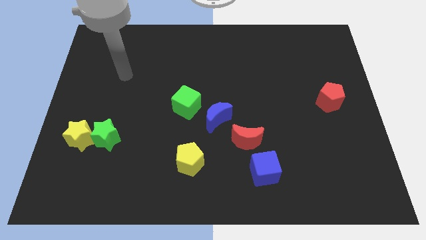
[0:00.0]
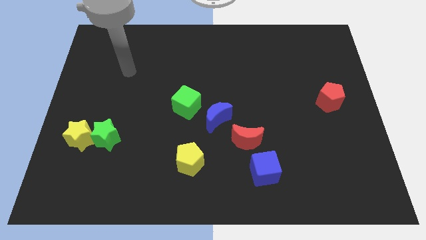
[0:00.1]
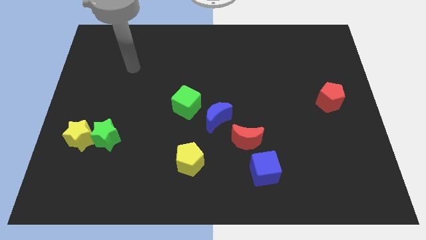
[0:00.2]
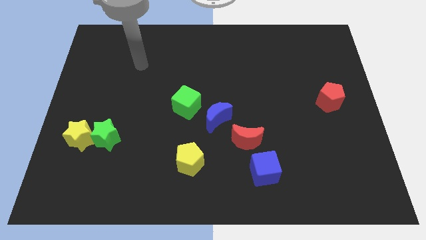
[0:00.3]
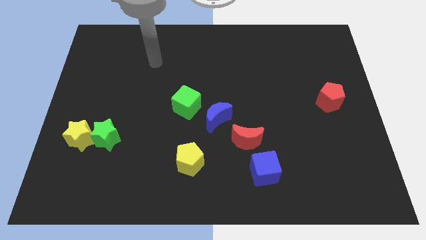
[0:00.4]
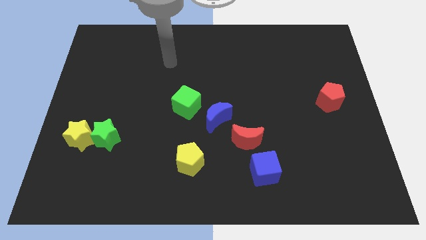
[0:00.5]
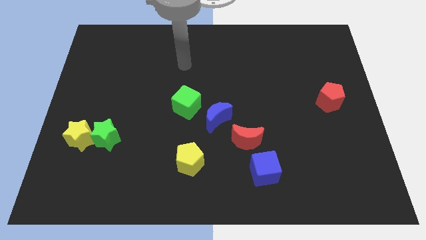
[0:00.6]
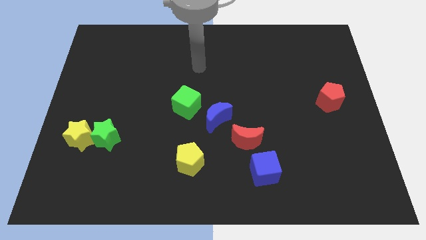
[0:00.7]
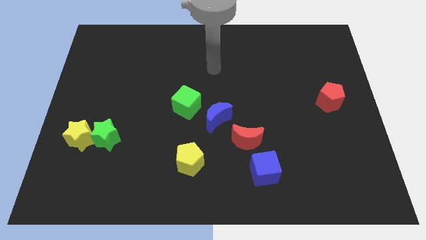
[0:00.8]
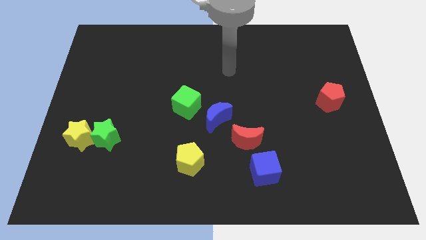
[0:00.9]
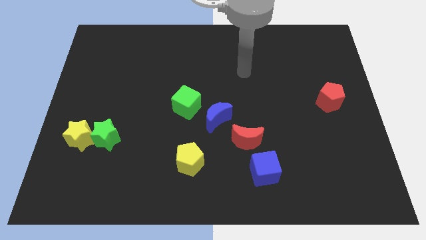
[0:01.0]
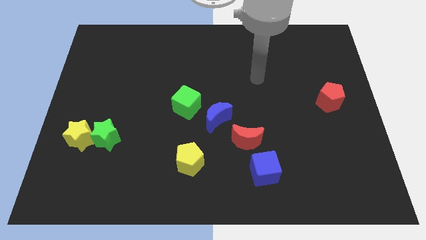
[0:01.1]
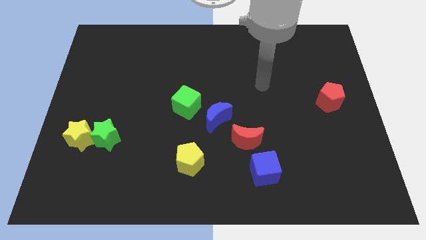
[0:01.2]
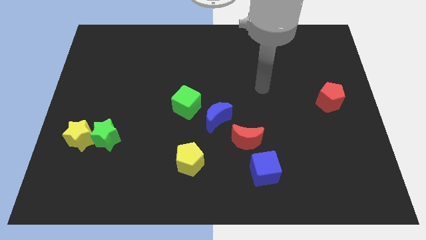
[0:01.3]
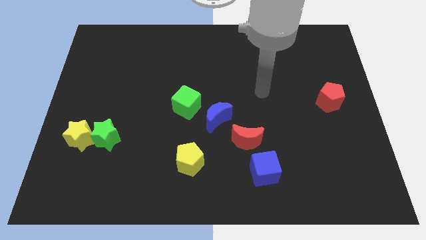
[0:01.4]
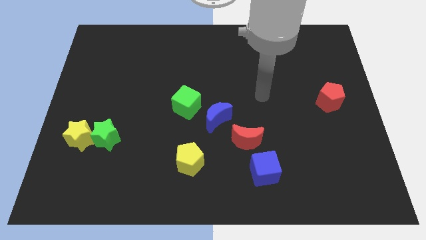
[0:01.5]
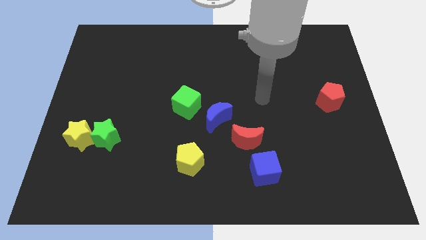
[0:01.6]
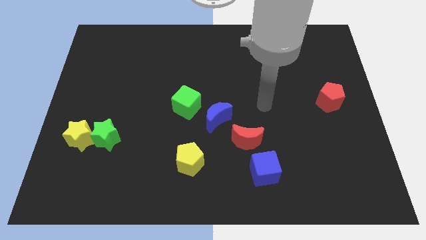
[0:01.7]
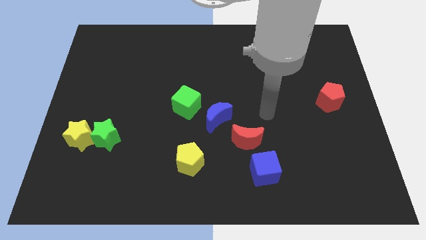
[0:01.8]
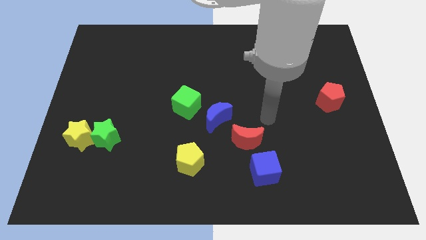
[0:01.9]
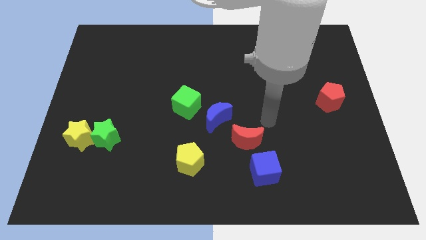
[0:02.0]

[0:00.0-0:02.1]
move your arm towards the red crescent

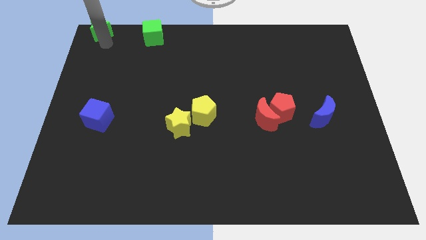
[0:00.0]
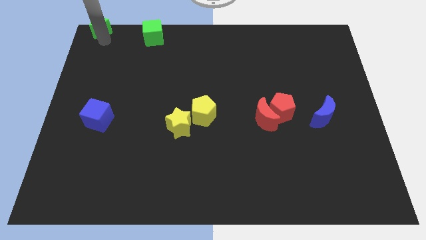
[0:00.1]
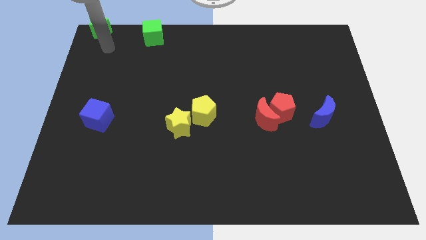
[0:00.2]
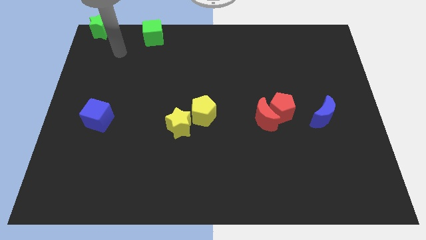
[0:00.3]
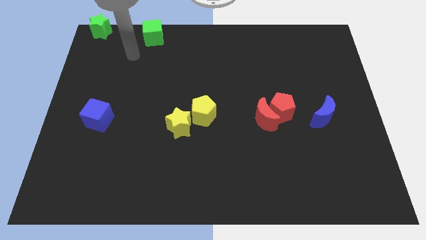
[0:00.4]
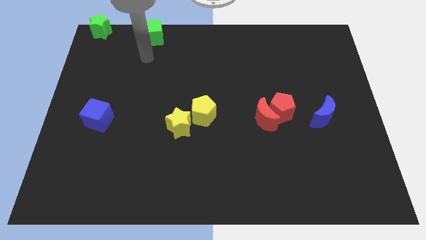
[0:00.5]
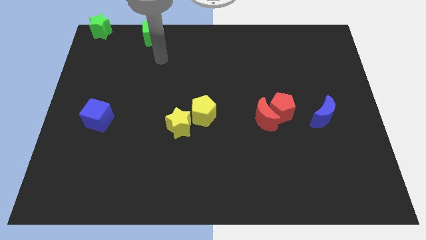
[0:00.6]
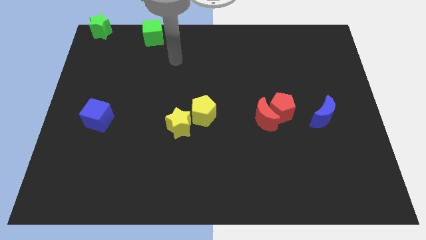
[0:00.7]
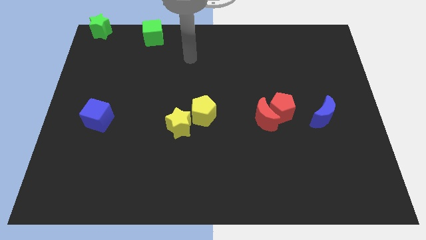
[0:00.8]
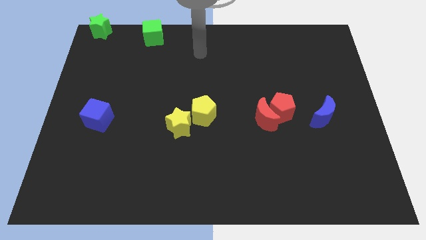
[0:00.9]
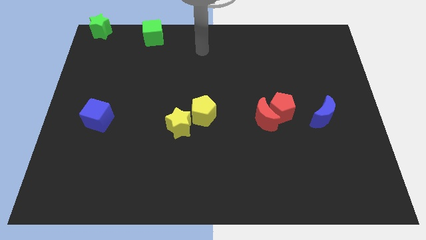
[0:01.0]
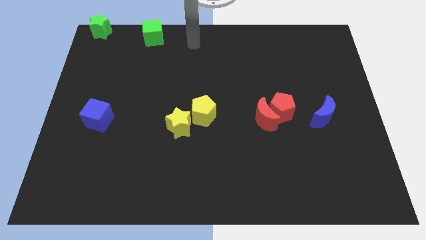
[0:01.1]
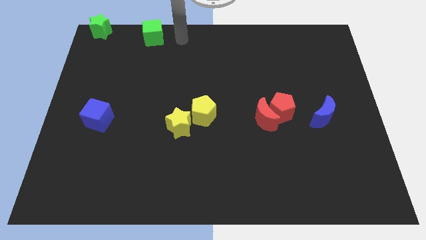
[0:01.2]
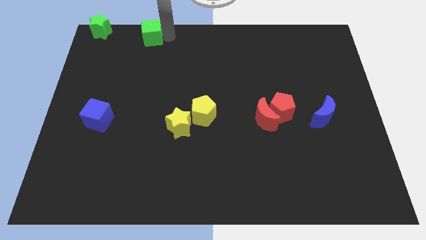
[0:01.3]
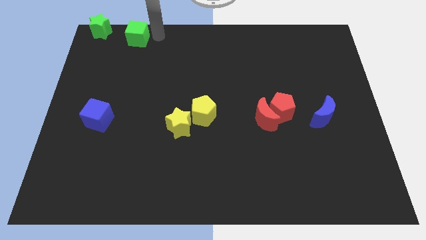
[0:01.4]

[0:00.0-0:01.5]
move the arm to the right of the green cube

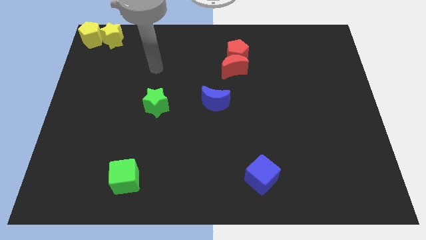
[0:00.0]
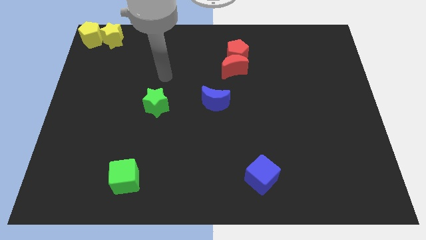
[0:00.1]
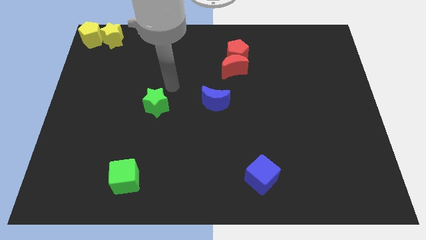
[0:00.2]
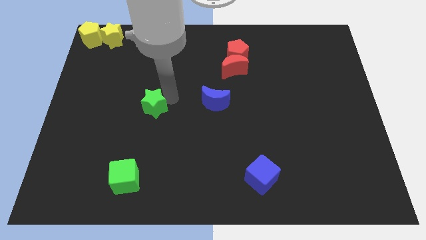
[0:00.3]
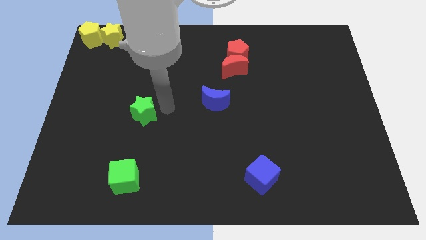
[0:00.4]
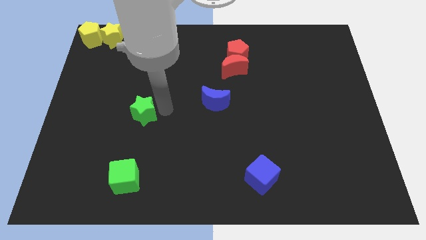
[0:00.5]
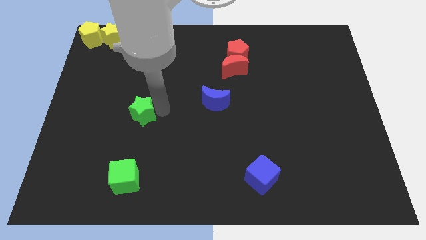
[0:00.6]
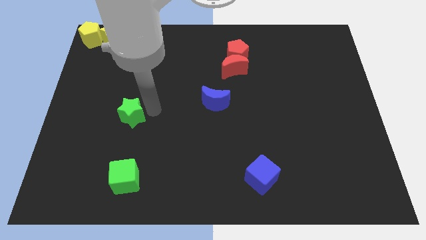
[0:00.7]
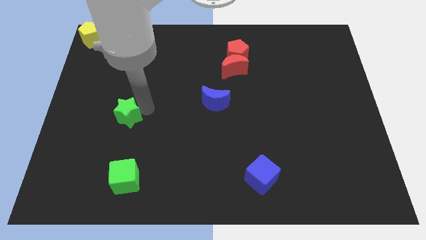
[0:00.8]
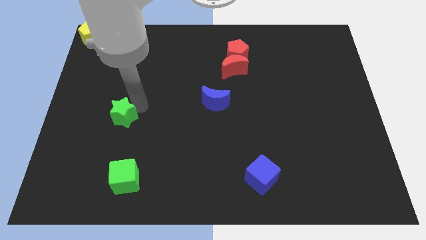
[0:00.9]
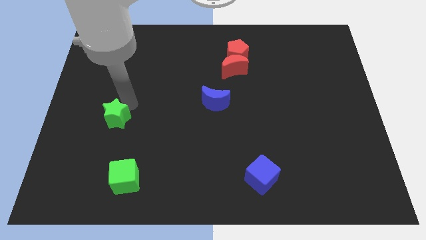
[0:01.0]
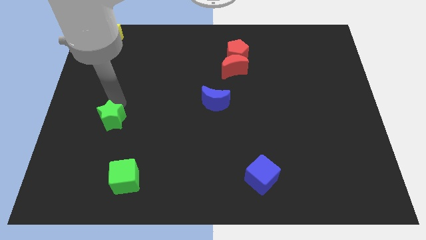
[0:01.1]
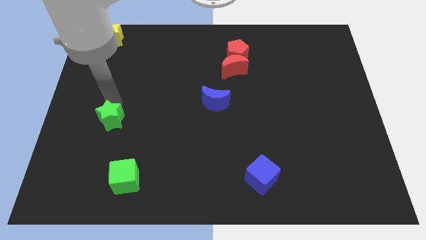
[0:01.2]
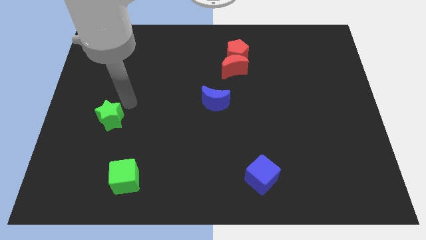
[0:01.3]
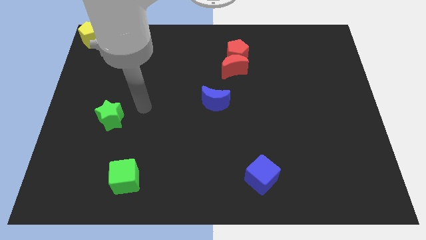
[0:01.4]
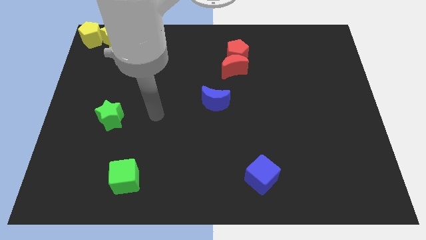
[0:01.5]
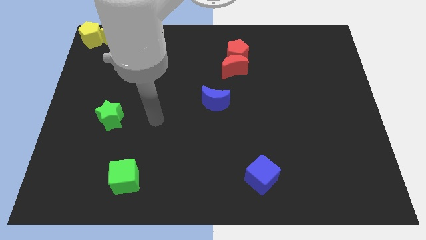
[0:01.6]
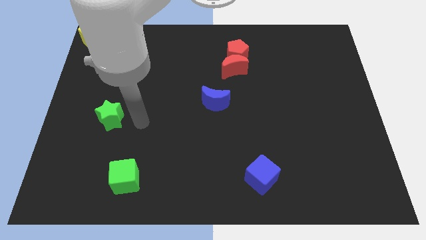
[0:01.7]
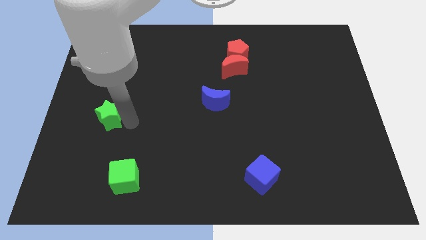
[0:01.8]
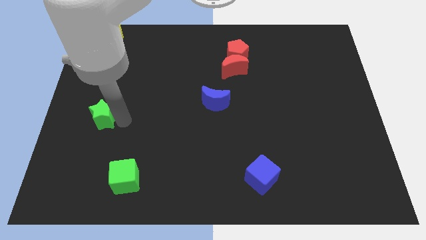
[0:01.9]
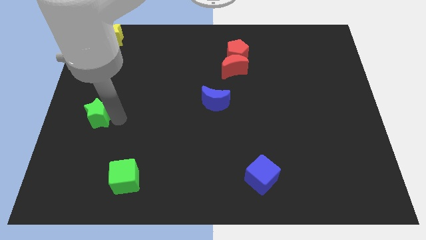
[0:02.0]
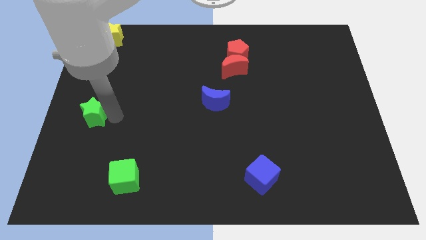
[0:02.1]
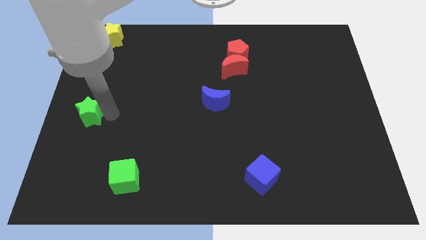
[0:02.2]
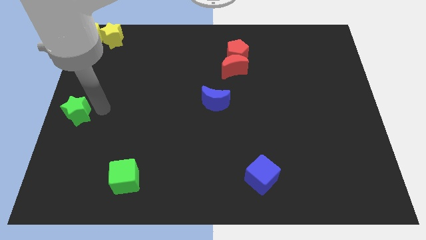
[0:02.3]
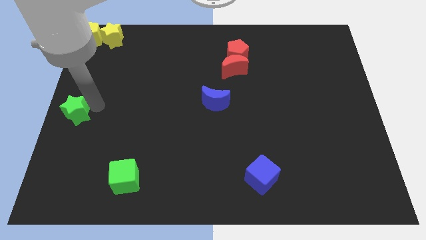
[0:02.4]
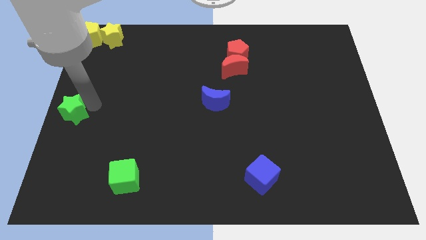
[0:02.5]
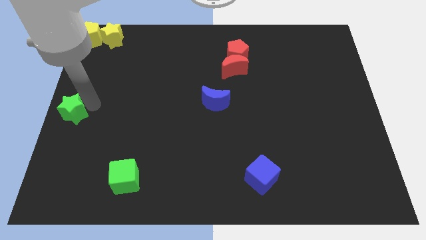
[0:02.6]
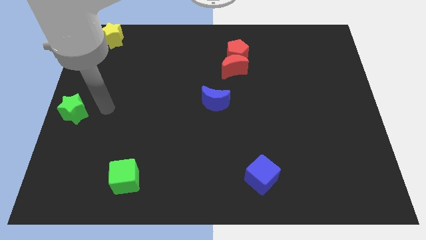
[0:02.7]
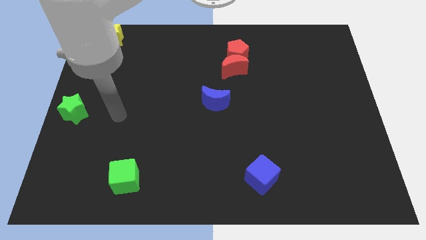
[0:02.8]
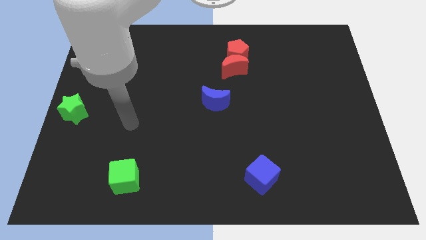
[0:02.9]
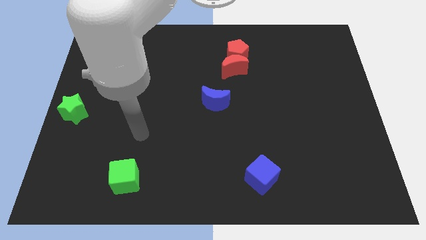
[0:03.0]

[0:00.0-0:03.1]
move the green star to the center left

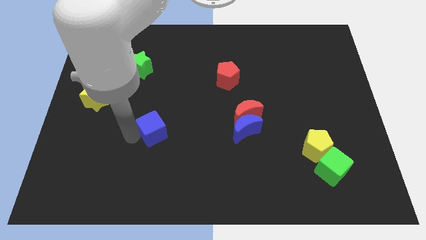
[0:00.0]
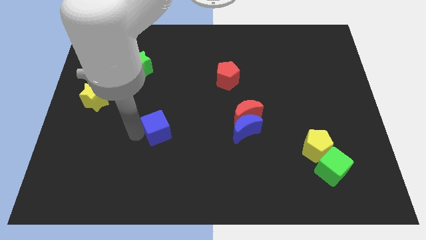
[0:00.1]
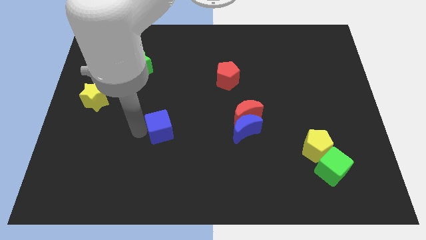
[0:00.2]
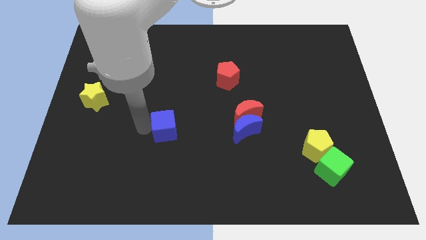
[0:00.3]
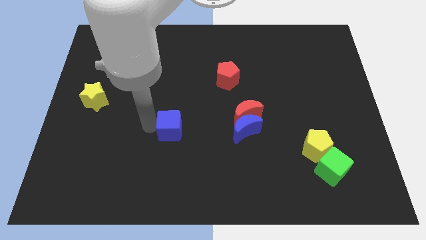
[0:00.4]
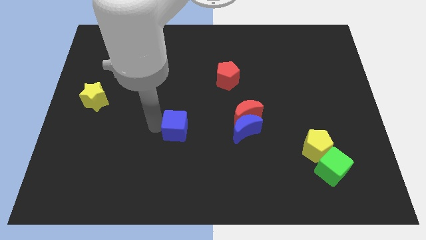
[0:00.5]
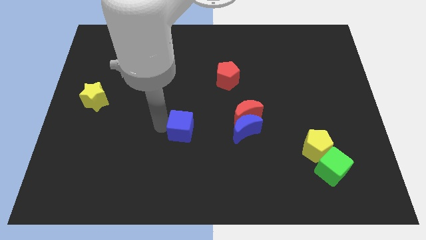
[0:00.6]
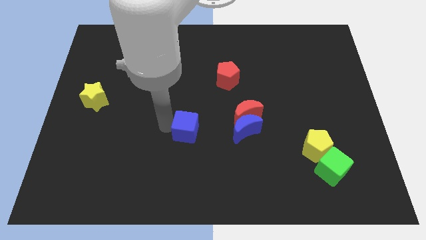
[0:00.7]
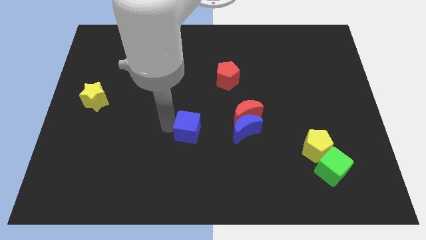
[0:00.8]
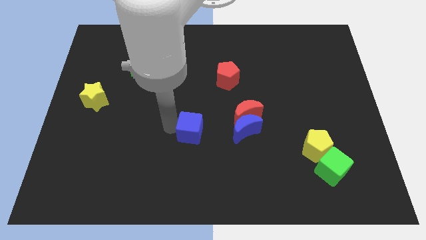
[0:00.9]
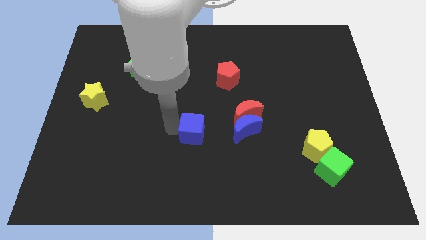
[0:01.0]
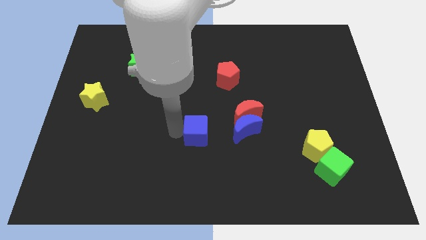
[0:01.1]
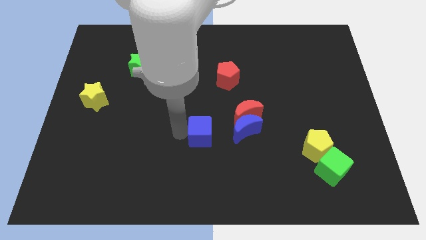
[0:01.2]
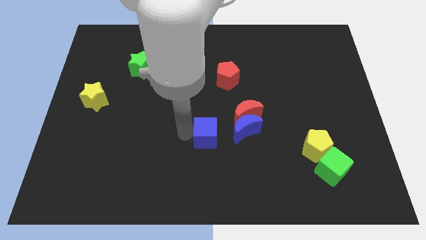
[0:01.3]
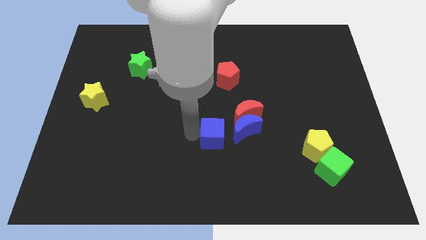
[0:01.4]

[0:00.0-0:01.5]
push the blue cube to the left of the blue crescent

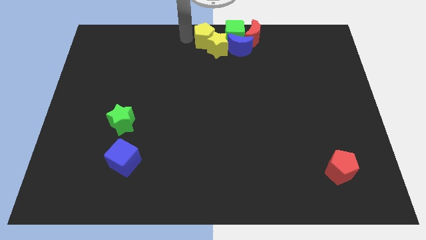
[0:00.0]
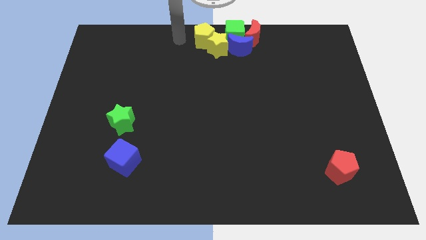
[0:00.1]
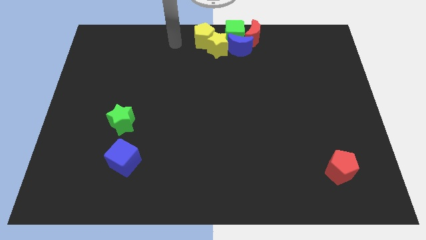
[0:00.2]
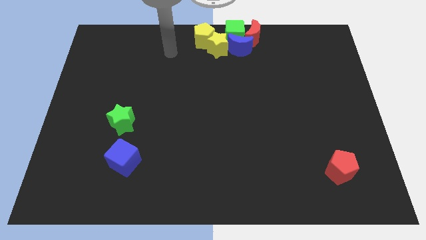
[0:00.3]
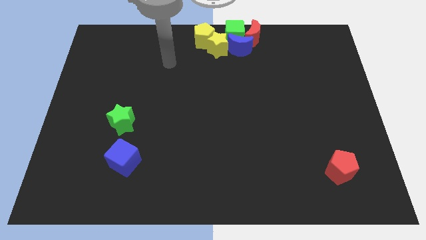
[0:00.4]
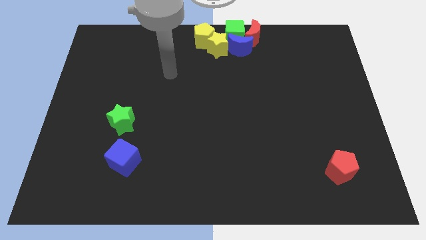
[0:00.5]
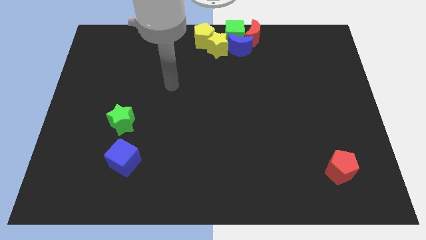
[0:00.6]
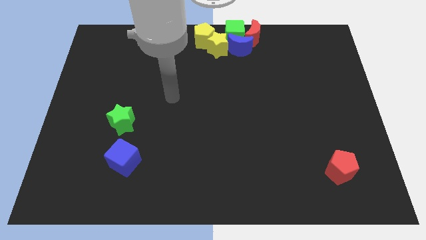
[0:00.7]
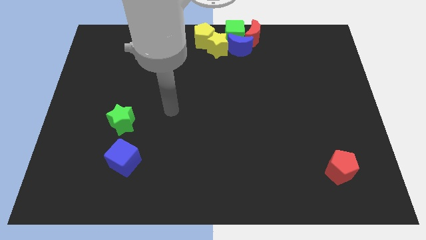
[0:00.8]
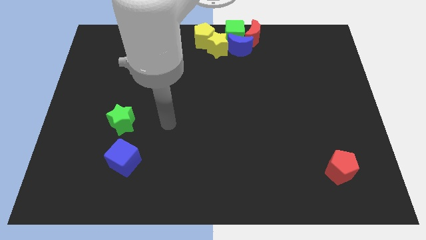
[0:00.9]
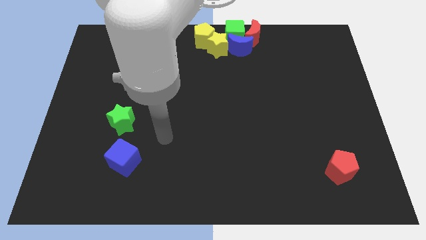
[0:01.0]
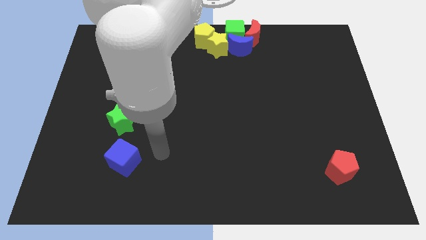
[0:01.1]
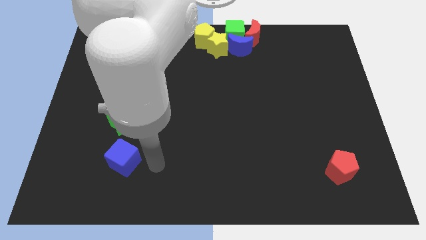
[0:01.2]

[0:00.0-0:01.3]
move your arm towards the blue block
